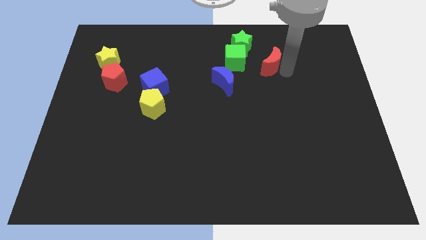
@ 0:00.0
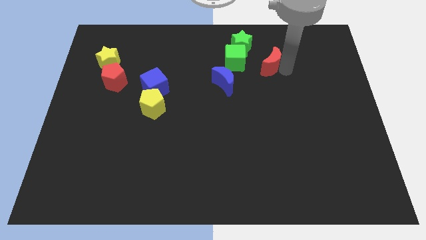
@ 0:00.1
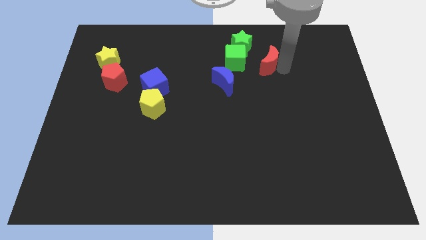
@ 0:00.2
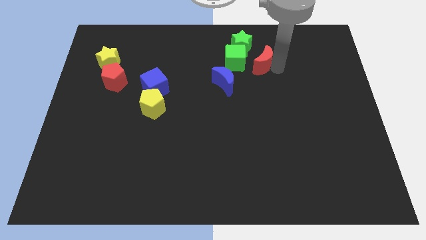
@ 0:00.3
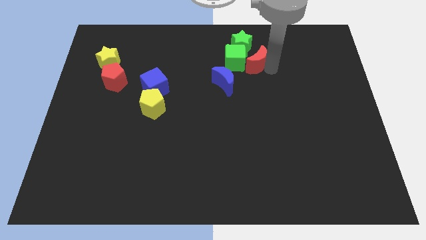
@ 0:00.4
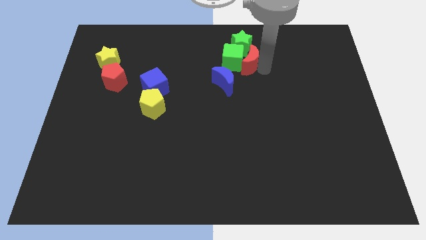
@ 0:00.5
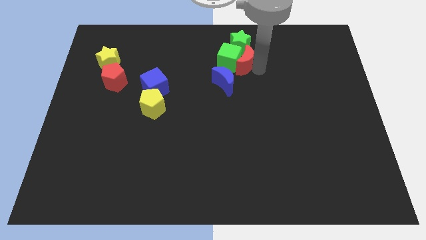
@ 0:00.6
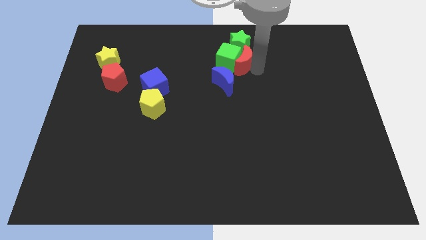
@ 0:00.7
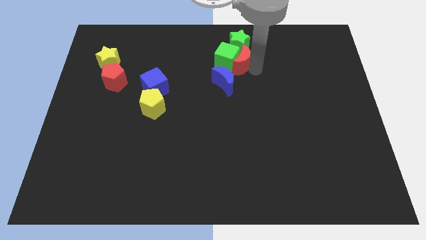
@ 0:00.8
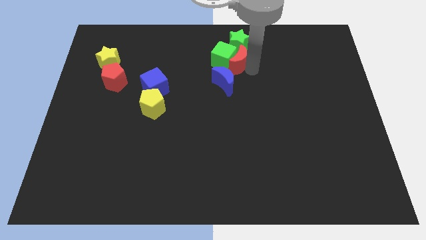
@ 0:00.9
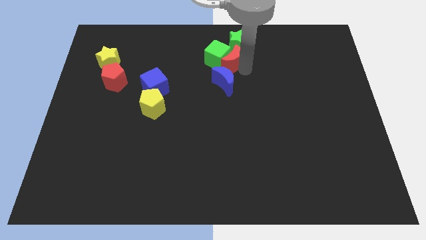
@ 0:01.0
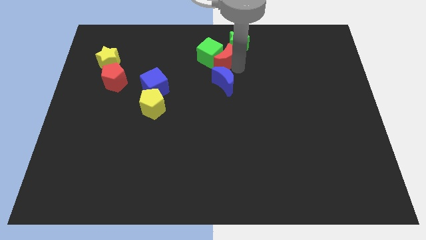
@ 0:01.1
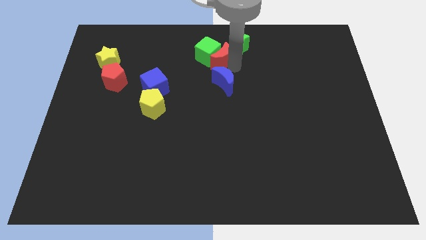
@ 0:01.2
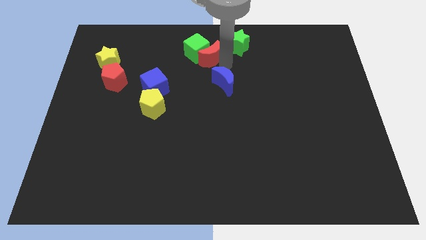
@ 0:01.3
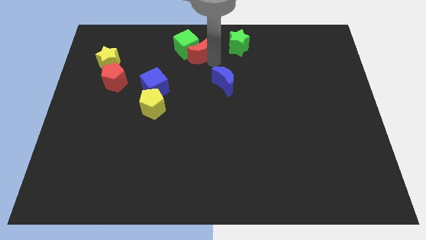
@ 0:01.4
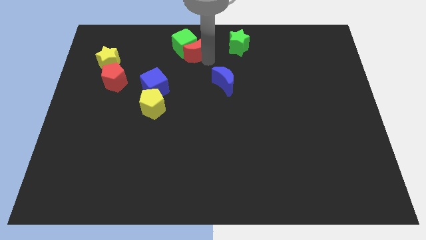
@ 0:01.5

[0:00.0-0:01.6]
put the green cube and red crescent left to the green star

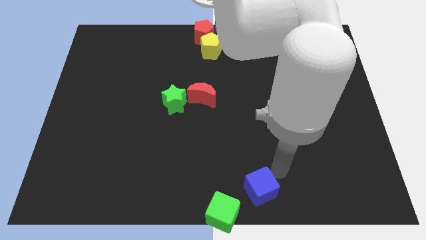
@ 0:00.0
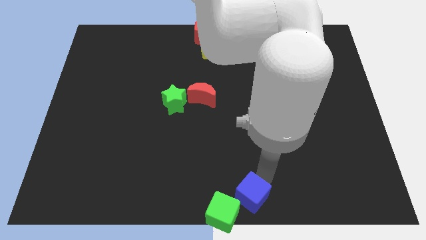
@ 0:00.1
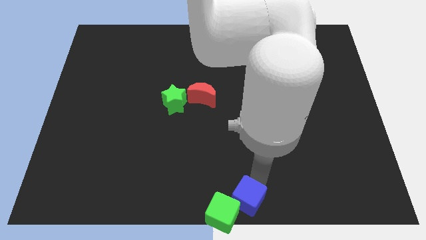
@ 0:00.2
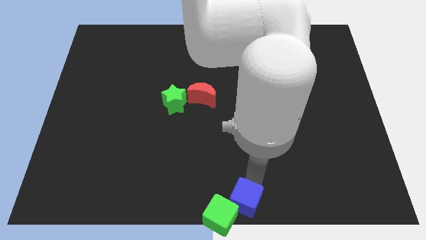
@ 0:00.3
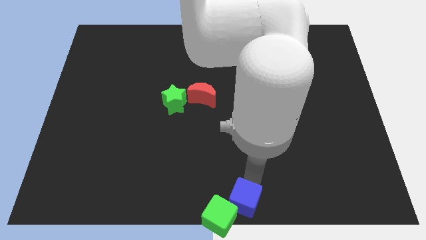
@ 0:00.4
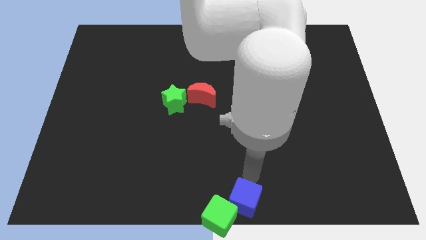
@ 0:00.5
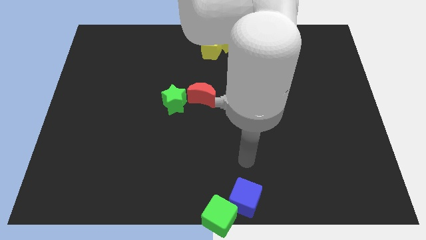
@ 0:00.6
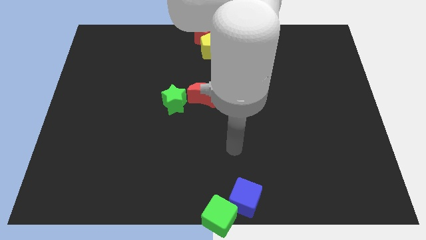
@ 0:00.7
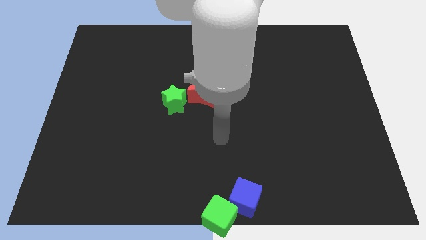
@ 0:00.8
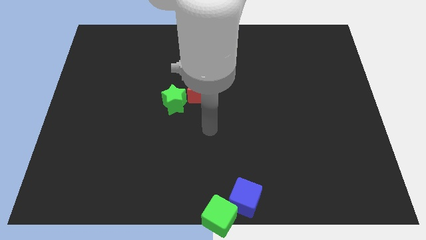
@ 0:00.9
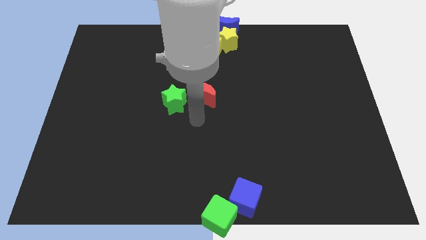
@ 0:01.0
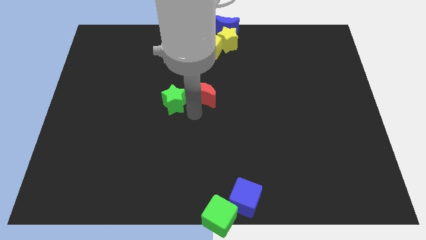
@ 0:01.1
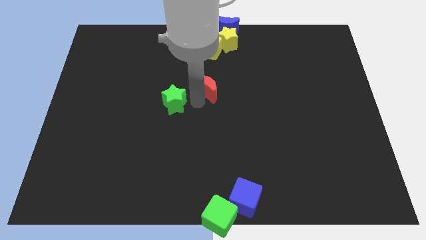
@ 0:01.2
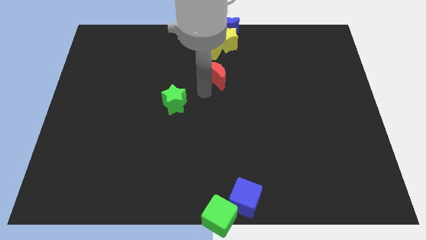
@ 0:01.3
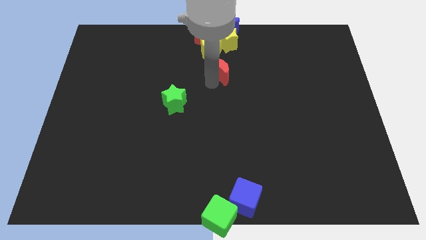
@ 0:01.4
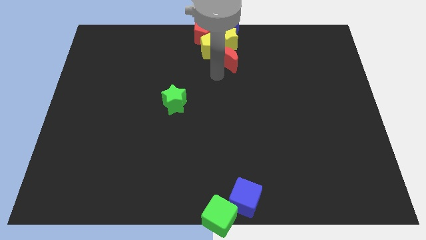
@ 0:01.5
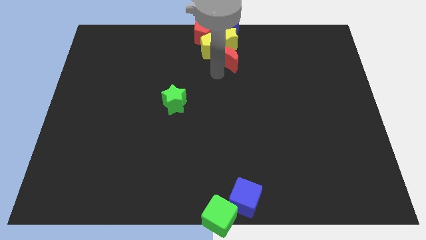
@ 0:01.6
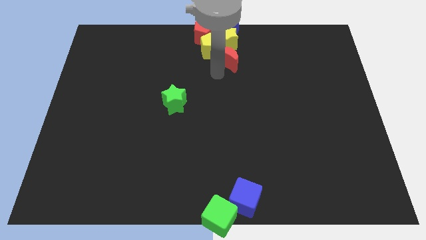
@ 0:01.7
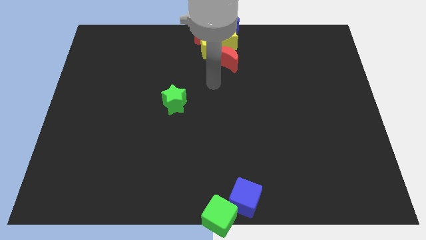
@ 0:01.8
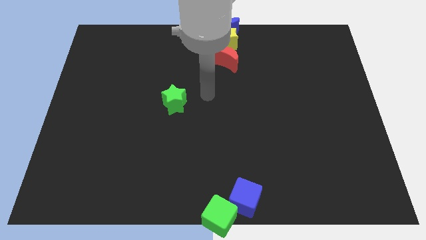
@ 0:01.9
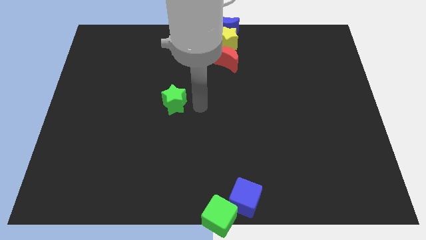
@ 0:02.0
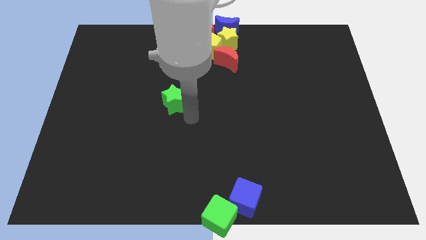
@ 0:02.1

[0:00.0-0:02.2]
separate the red moon from the green star

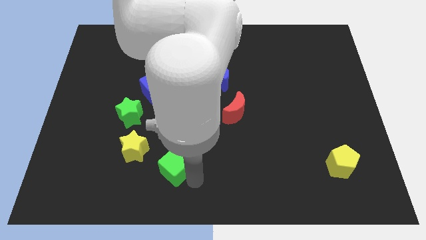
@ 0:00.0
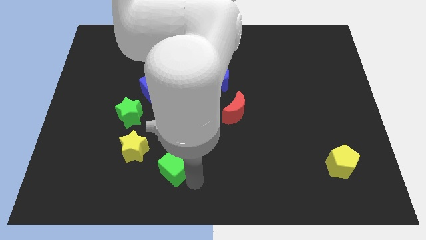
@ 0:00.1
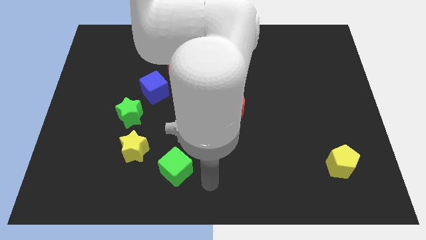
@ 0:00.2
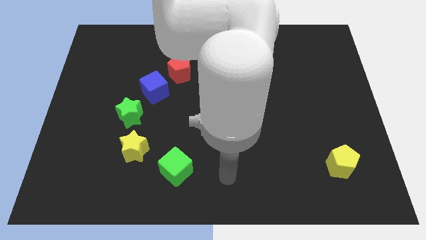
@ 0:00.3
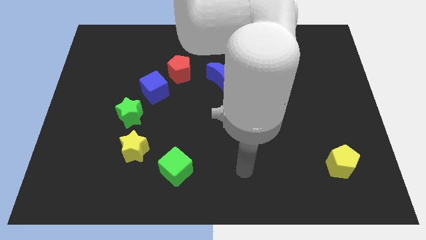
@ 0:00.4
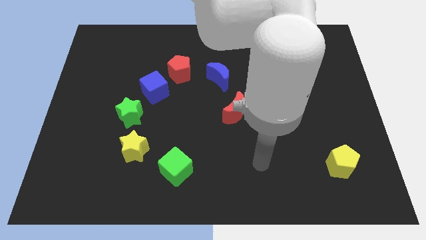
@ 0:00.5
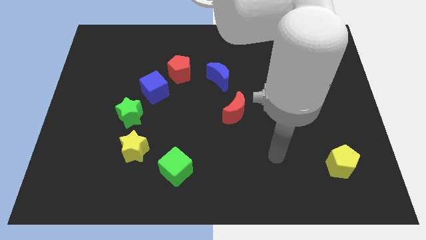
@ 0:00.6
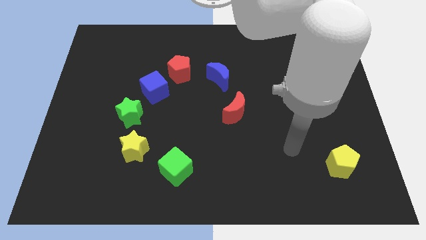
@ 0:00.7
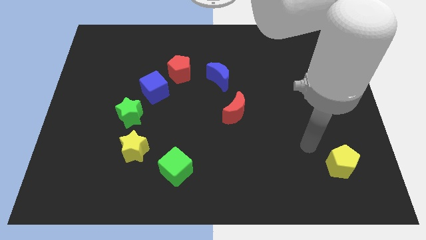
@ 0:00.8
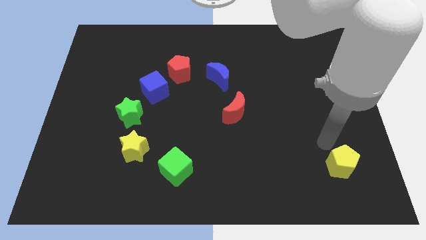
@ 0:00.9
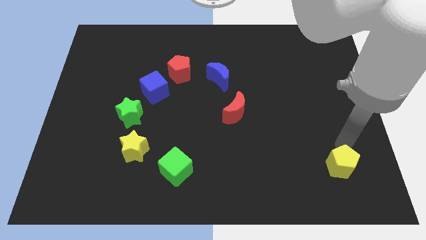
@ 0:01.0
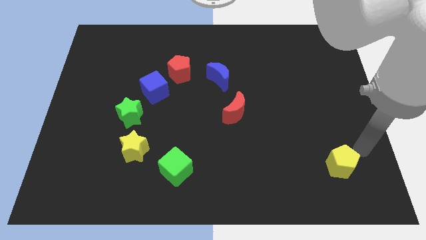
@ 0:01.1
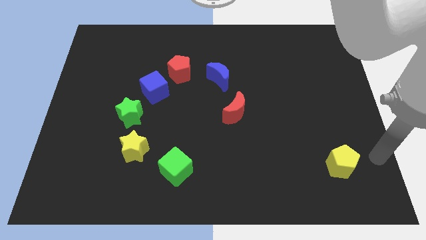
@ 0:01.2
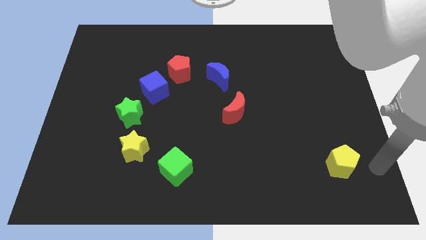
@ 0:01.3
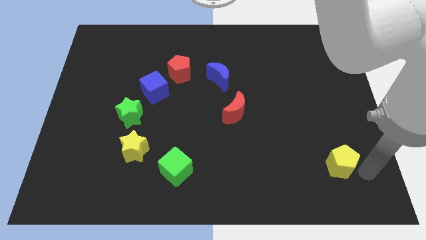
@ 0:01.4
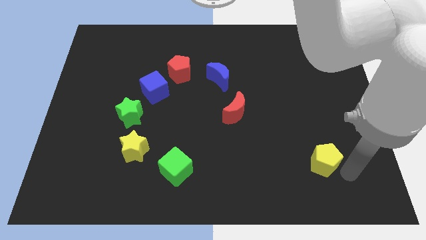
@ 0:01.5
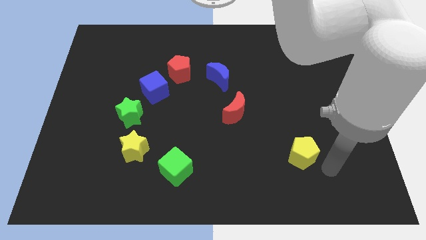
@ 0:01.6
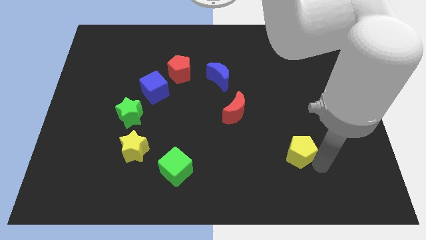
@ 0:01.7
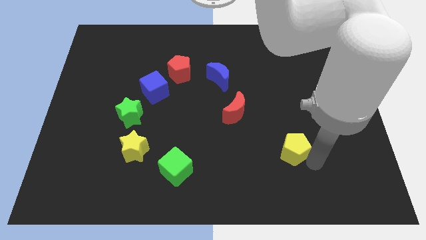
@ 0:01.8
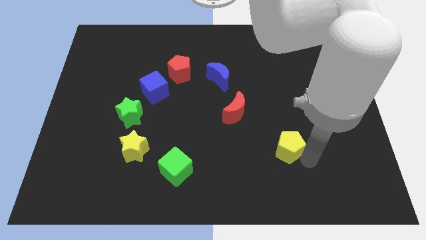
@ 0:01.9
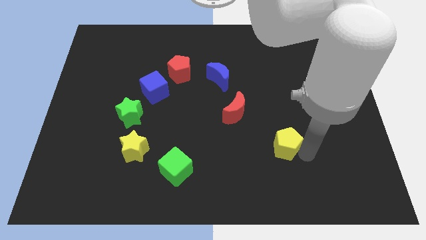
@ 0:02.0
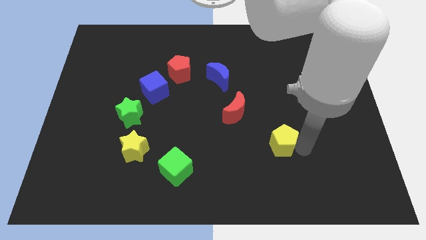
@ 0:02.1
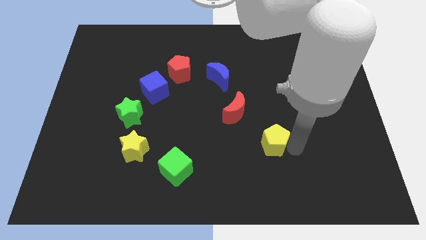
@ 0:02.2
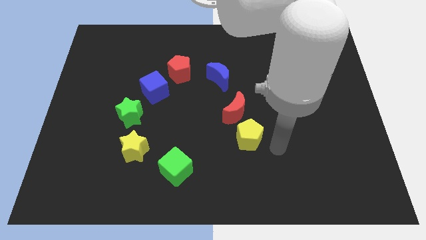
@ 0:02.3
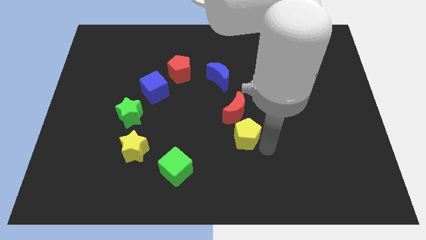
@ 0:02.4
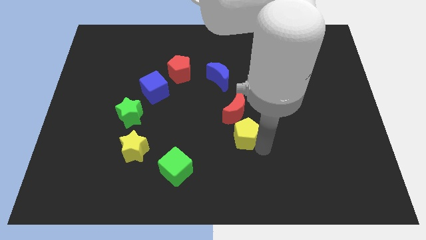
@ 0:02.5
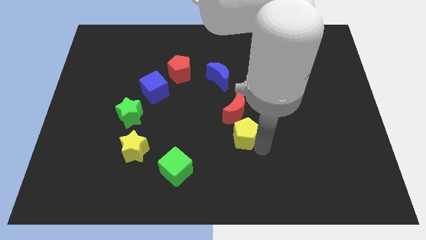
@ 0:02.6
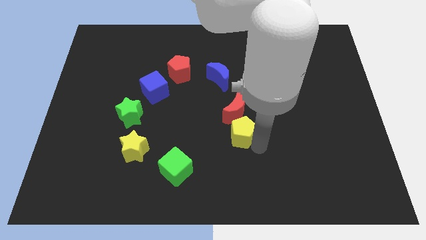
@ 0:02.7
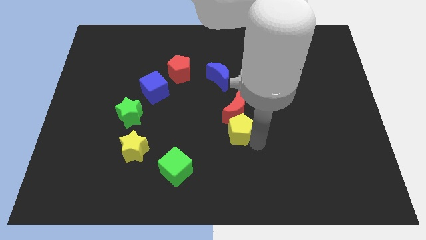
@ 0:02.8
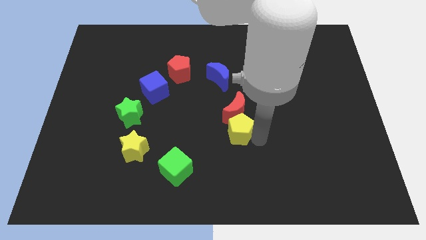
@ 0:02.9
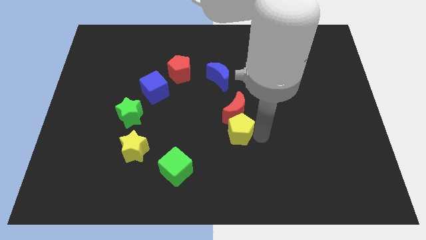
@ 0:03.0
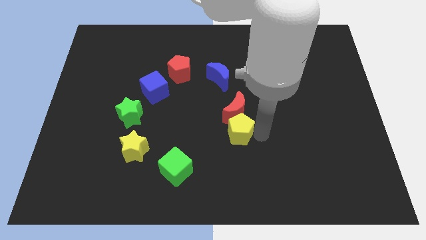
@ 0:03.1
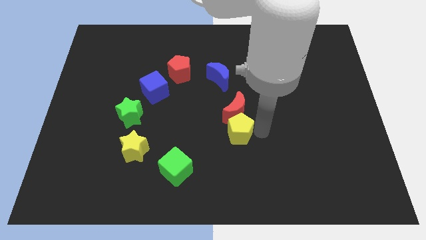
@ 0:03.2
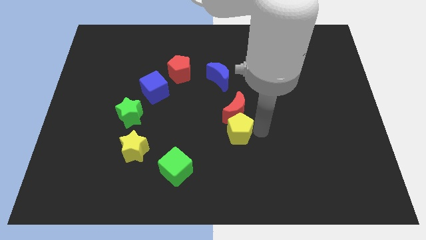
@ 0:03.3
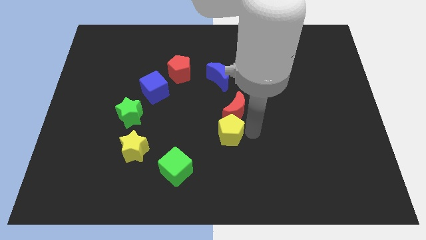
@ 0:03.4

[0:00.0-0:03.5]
move the yellow pentagon to the bottom of the red moon

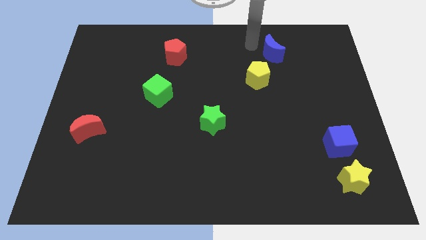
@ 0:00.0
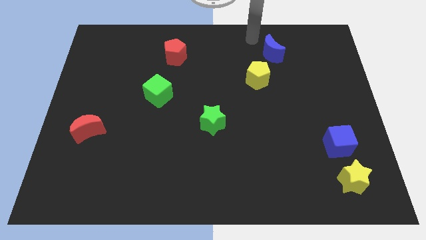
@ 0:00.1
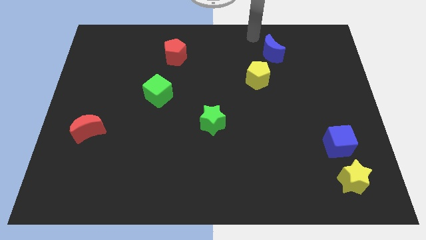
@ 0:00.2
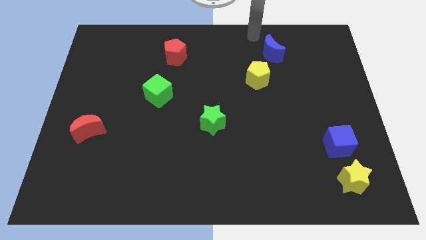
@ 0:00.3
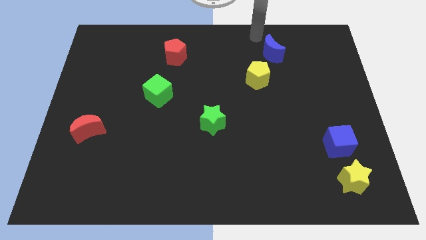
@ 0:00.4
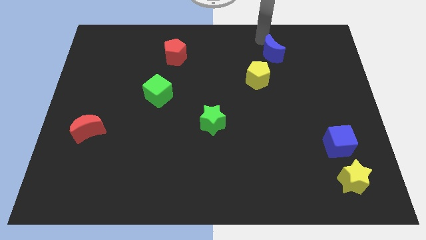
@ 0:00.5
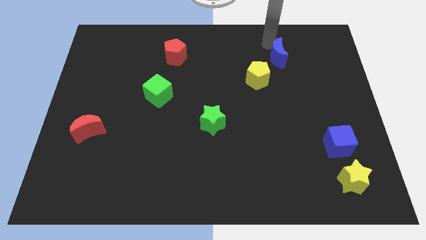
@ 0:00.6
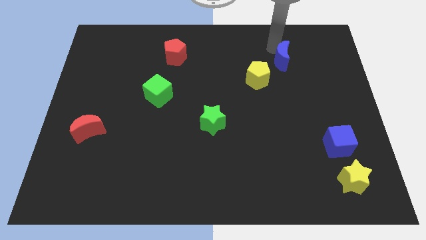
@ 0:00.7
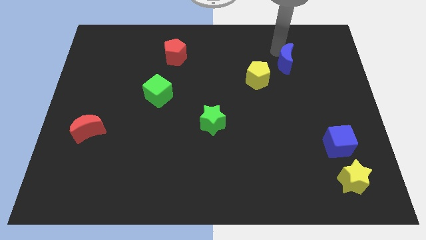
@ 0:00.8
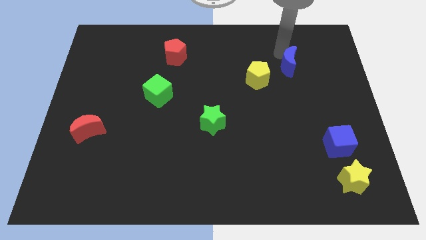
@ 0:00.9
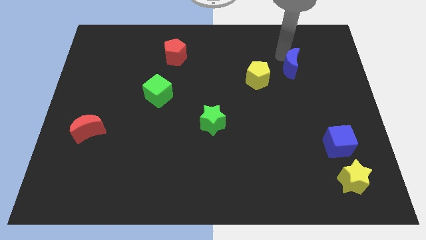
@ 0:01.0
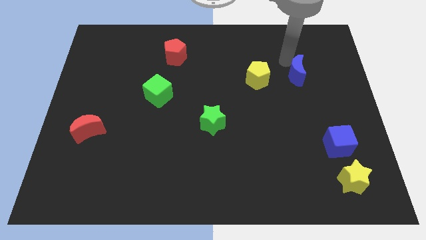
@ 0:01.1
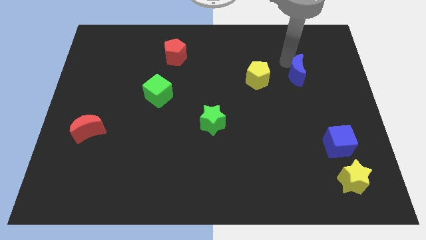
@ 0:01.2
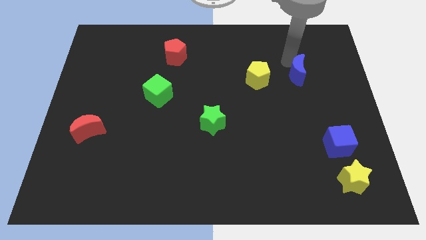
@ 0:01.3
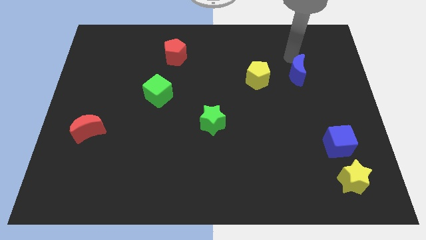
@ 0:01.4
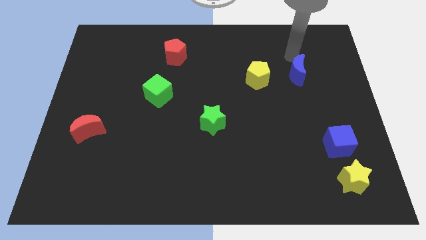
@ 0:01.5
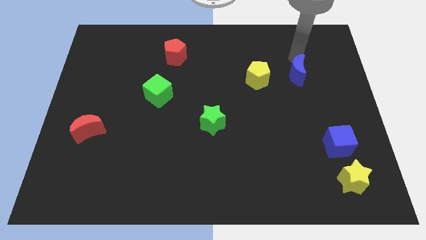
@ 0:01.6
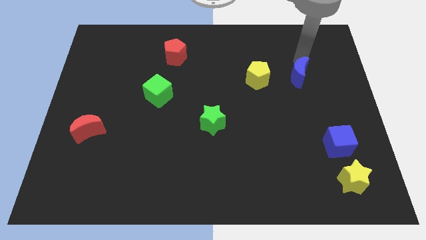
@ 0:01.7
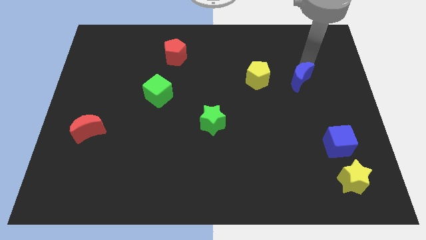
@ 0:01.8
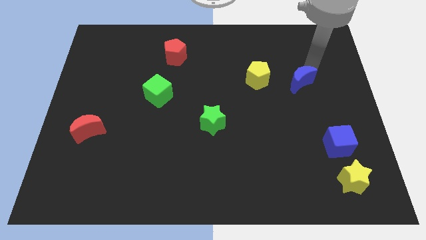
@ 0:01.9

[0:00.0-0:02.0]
move the blue crescent to the right of the yellow pentagon
